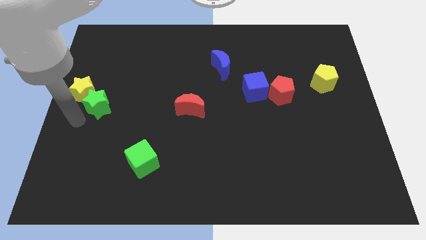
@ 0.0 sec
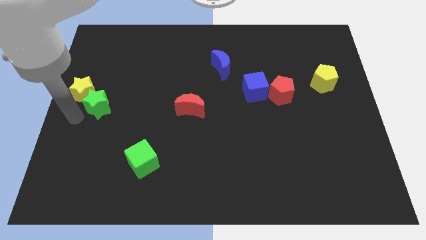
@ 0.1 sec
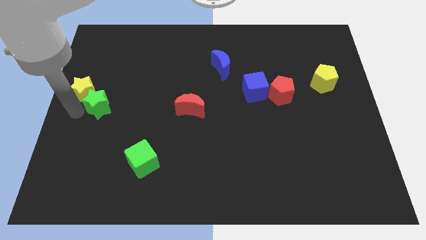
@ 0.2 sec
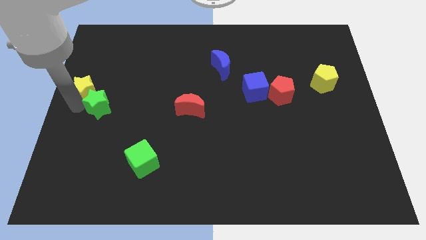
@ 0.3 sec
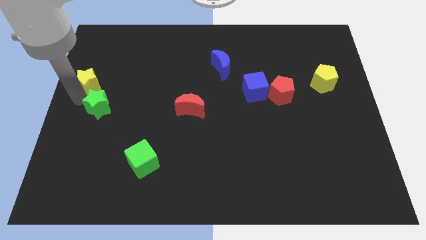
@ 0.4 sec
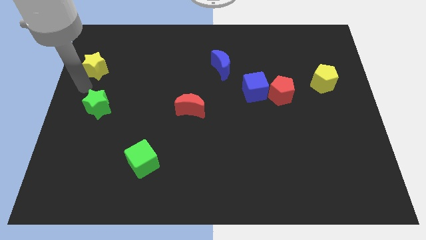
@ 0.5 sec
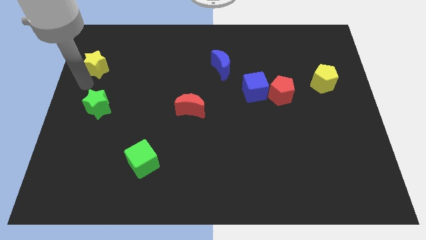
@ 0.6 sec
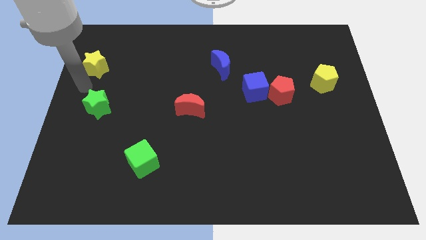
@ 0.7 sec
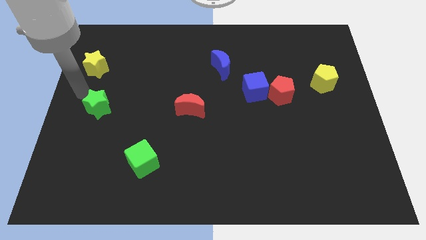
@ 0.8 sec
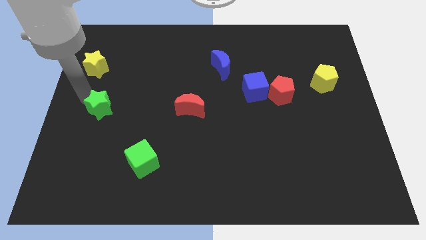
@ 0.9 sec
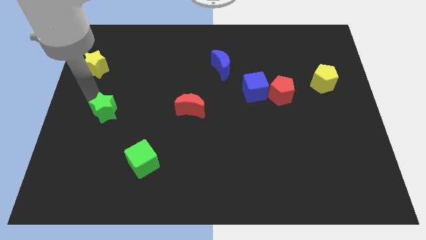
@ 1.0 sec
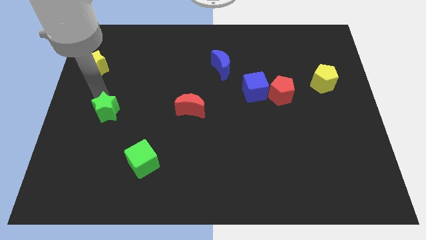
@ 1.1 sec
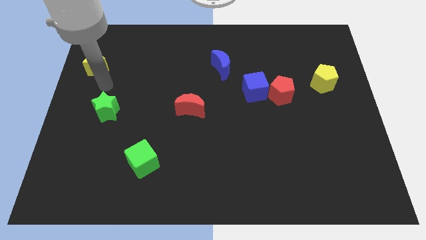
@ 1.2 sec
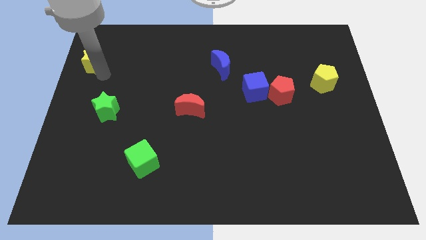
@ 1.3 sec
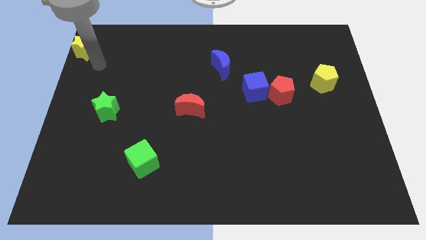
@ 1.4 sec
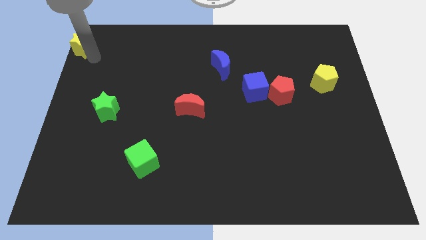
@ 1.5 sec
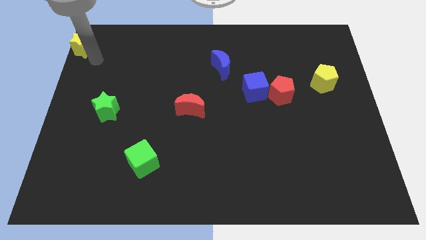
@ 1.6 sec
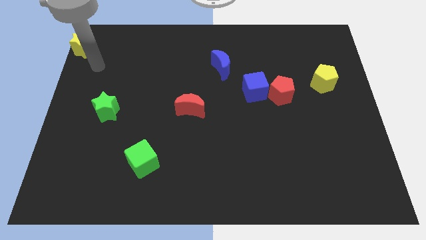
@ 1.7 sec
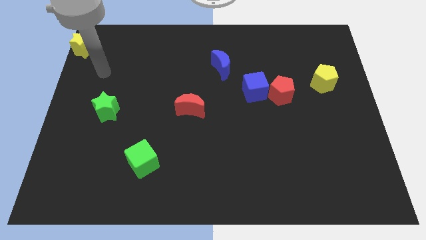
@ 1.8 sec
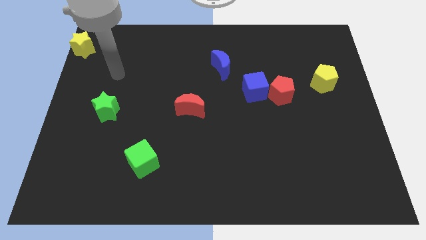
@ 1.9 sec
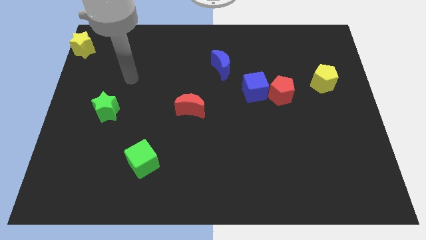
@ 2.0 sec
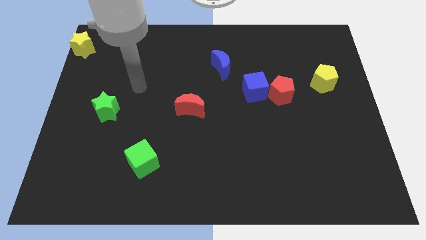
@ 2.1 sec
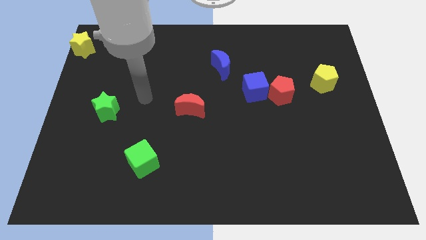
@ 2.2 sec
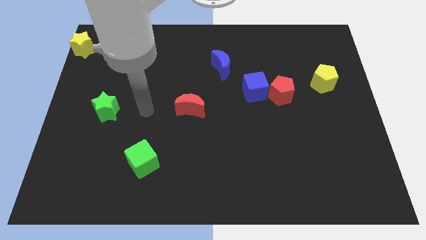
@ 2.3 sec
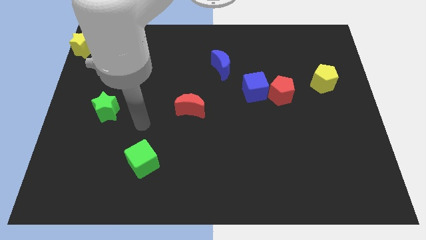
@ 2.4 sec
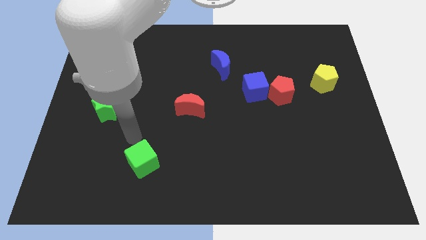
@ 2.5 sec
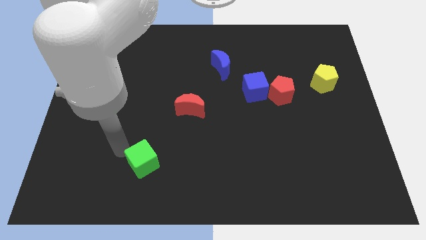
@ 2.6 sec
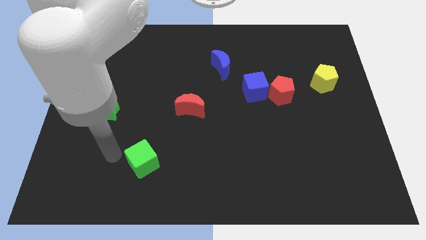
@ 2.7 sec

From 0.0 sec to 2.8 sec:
slide the yellow star to the top left of the board

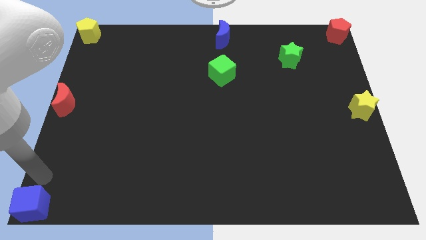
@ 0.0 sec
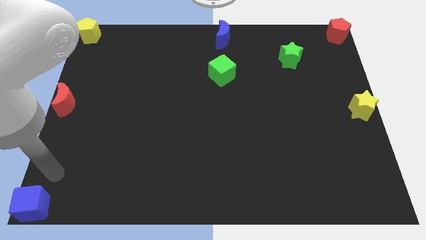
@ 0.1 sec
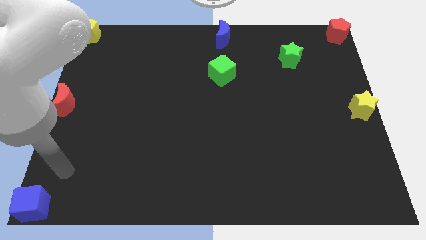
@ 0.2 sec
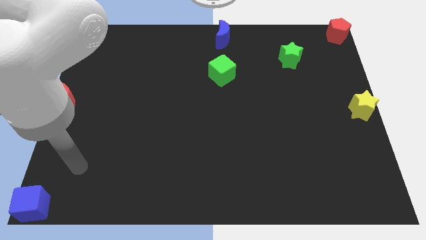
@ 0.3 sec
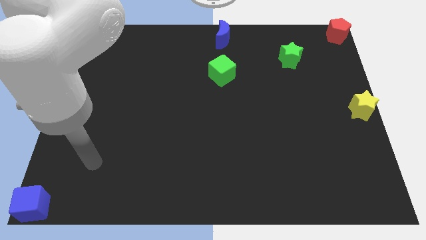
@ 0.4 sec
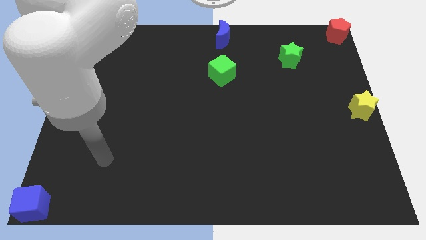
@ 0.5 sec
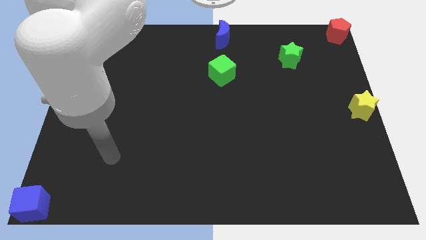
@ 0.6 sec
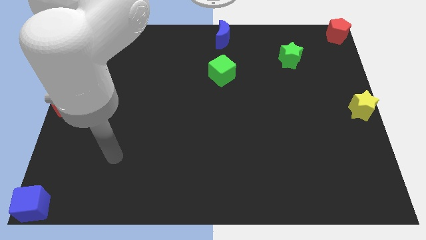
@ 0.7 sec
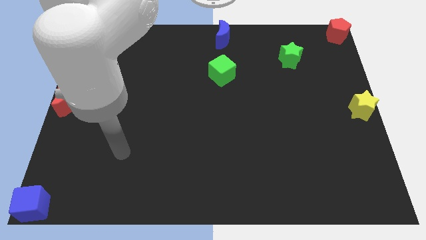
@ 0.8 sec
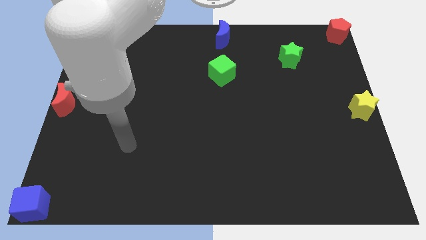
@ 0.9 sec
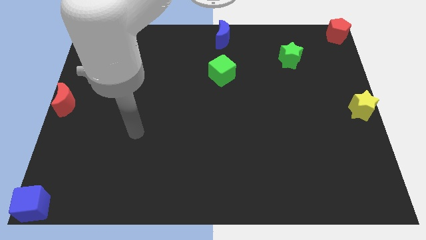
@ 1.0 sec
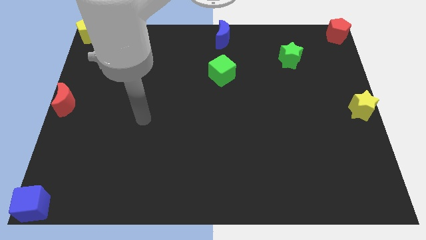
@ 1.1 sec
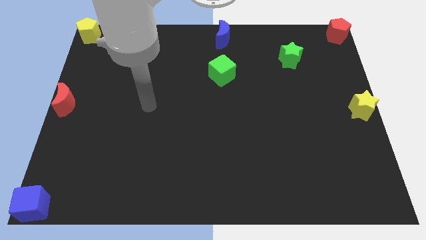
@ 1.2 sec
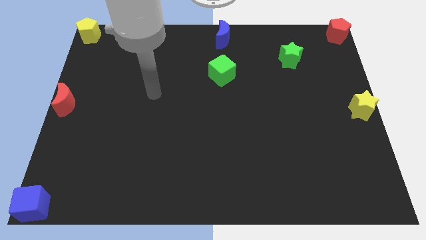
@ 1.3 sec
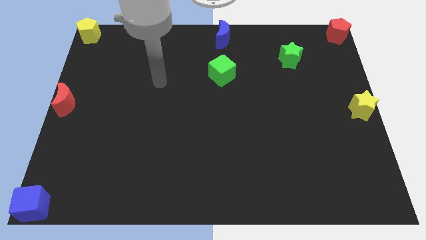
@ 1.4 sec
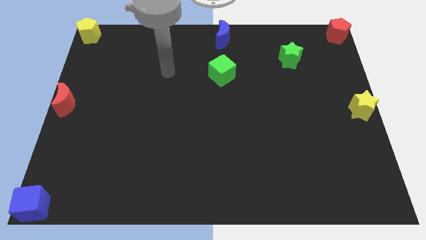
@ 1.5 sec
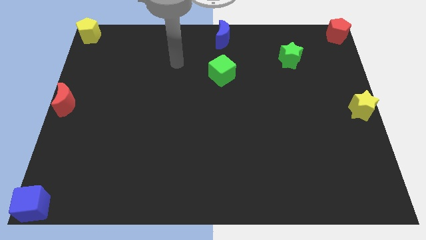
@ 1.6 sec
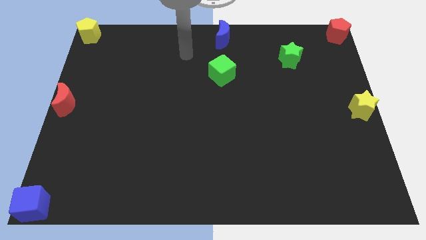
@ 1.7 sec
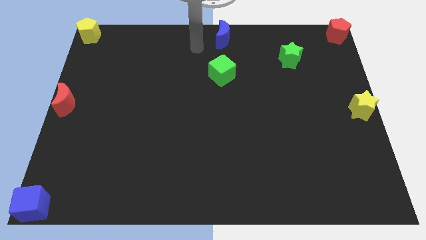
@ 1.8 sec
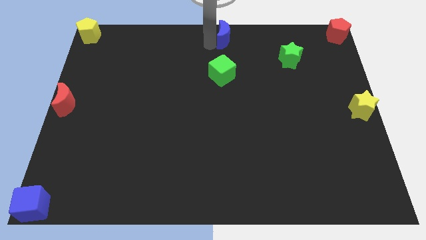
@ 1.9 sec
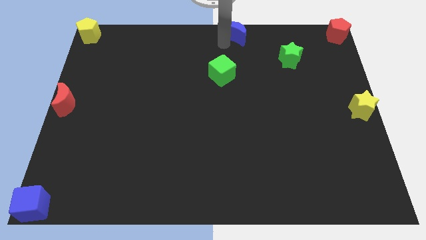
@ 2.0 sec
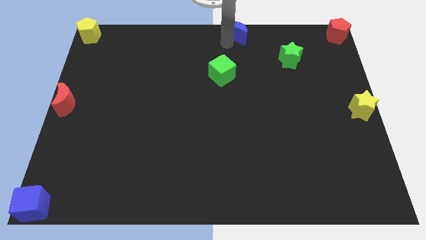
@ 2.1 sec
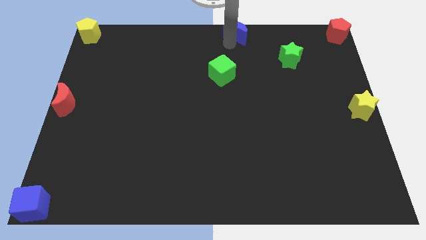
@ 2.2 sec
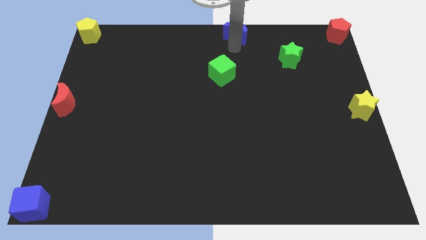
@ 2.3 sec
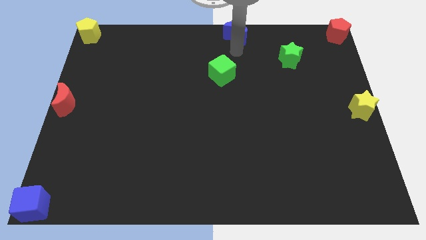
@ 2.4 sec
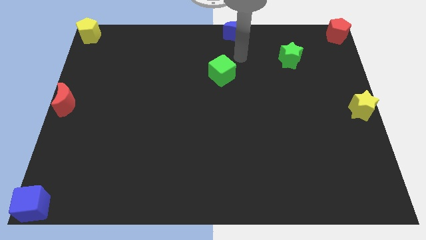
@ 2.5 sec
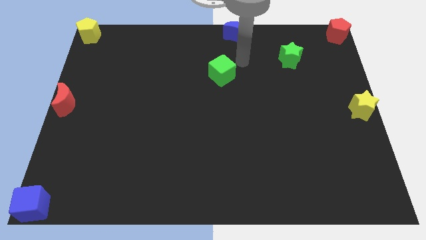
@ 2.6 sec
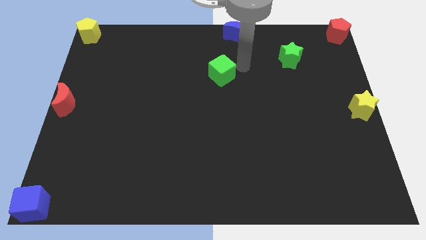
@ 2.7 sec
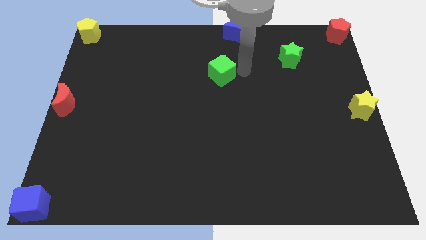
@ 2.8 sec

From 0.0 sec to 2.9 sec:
move your arm to the right side of the green star

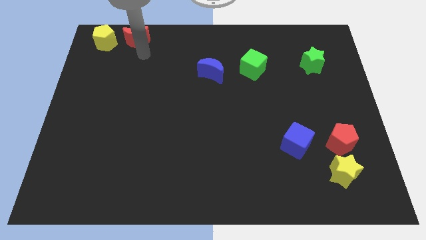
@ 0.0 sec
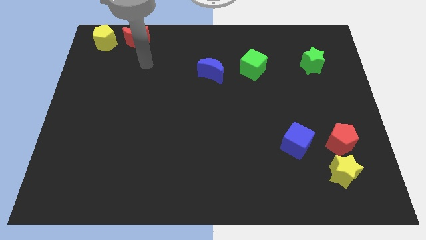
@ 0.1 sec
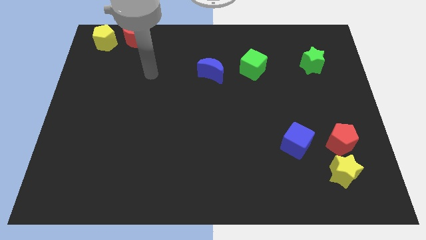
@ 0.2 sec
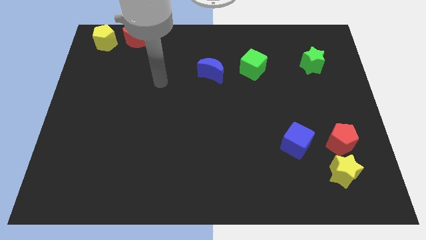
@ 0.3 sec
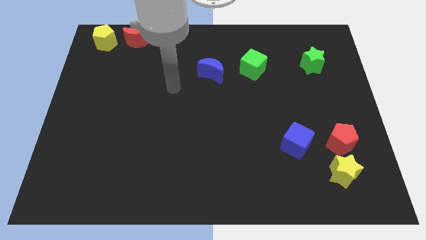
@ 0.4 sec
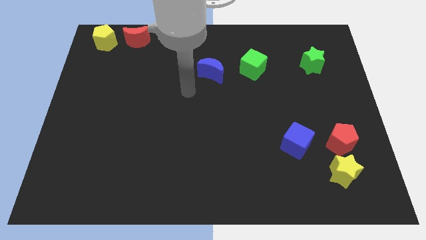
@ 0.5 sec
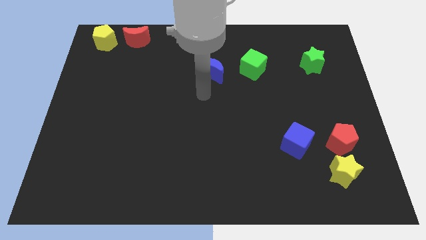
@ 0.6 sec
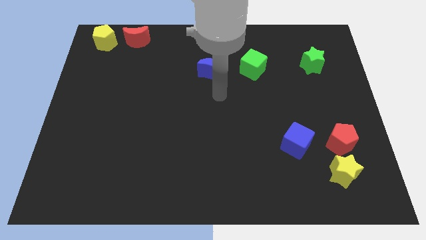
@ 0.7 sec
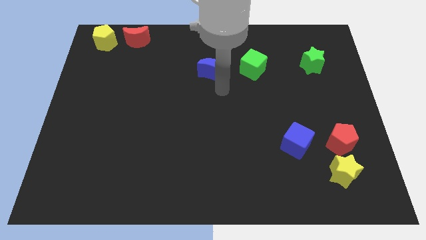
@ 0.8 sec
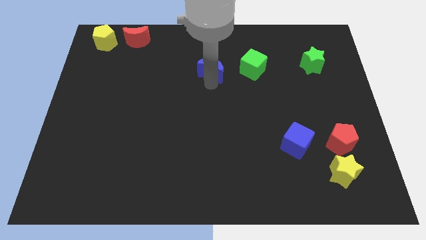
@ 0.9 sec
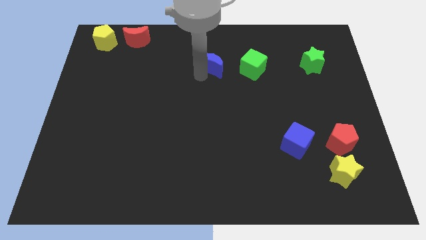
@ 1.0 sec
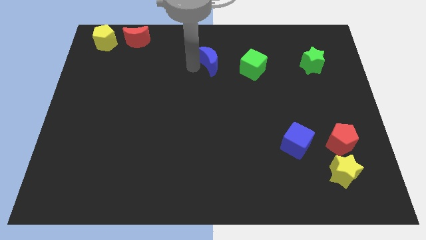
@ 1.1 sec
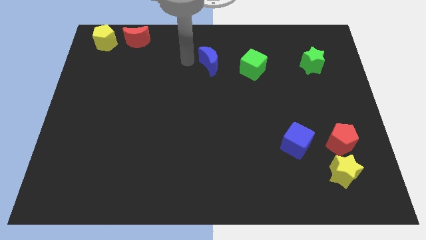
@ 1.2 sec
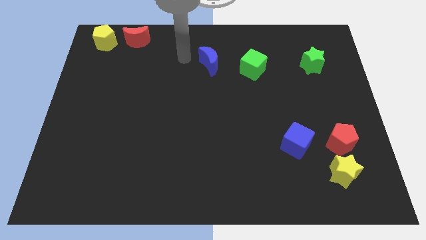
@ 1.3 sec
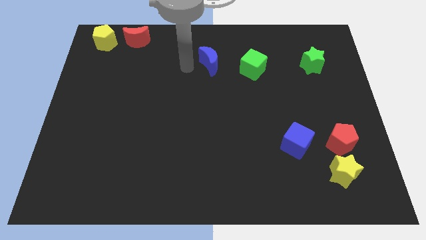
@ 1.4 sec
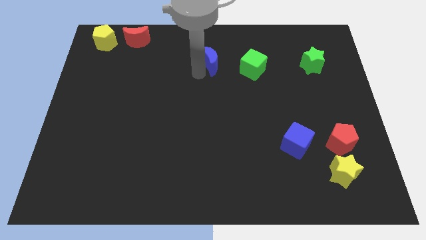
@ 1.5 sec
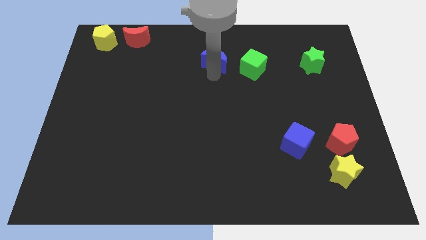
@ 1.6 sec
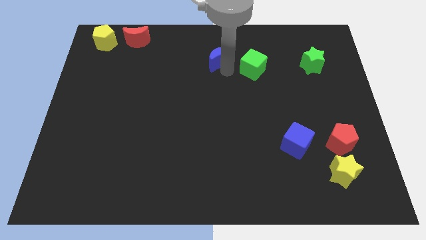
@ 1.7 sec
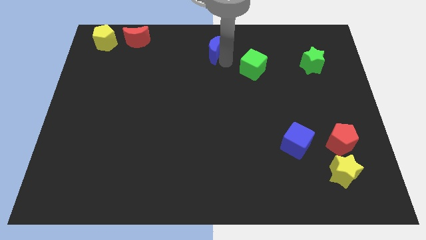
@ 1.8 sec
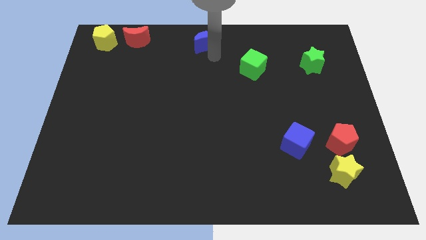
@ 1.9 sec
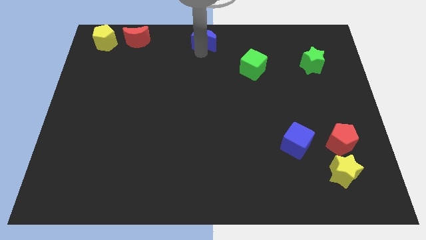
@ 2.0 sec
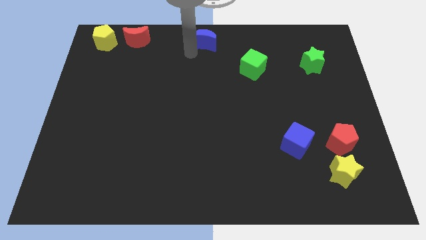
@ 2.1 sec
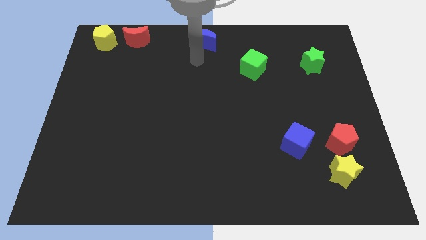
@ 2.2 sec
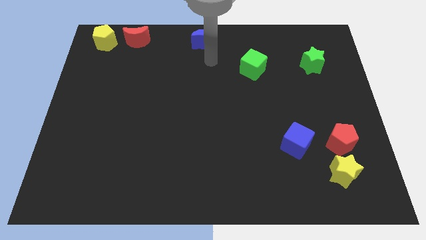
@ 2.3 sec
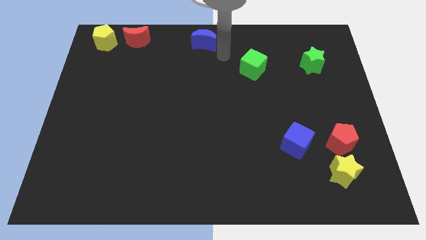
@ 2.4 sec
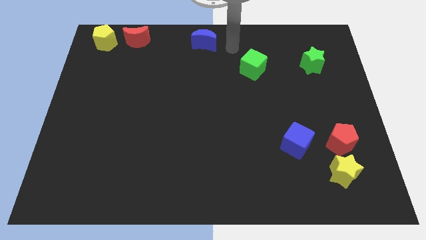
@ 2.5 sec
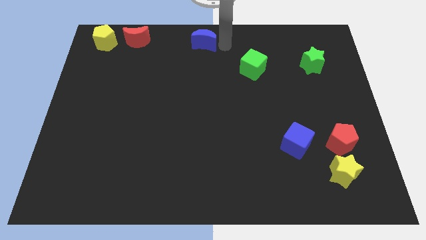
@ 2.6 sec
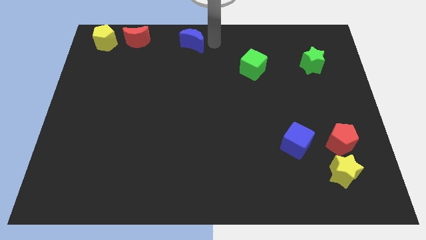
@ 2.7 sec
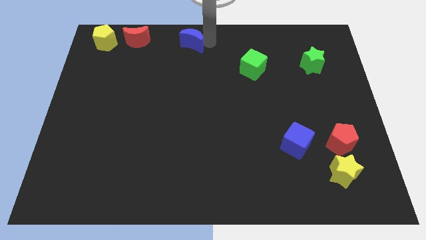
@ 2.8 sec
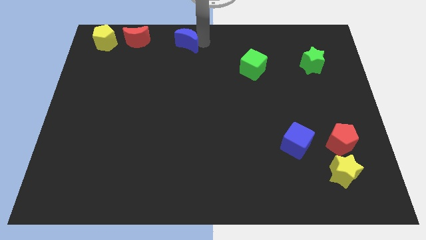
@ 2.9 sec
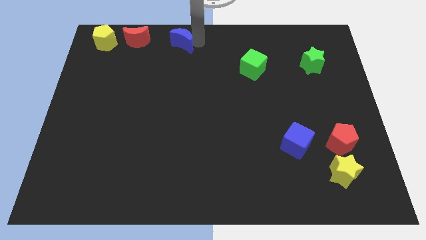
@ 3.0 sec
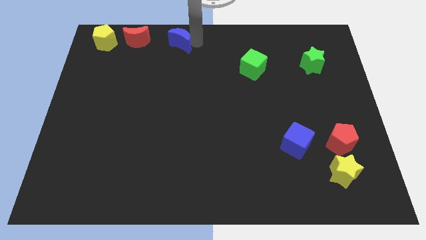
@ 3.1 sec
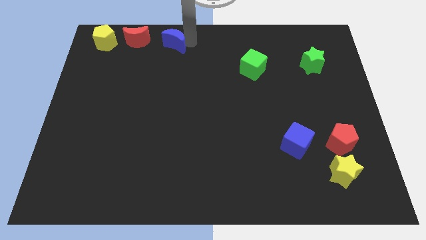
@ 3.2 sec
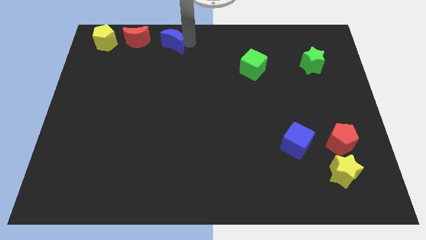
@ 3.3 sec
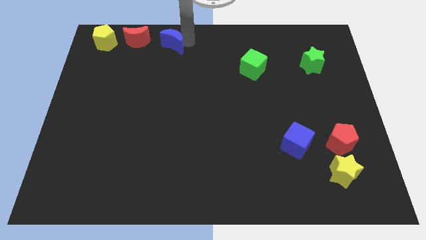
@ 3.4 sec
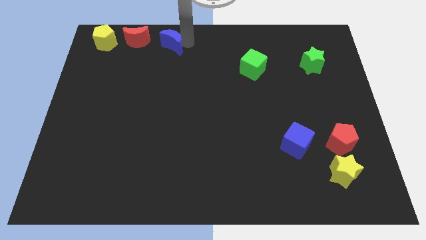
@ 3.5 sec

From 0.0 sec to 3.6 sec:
slide the blue crescent towards the right side of the red moon
